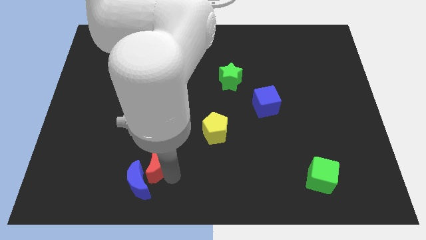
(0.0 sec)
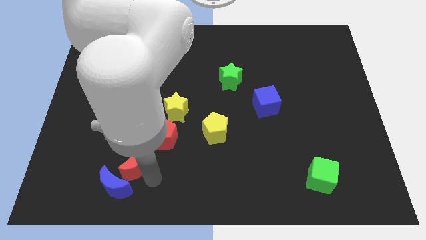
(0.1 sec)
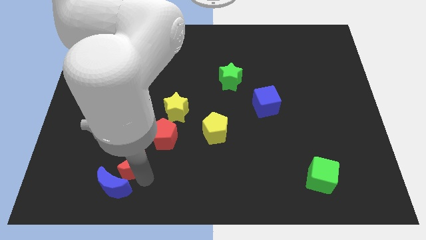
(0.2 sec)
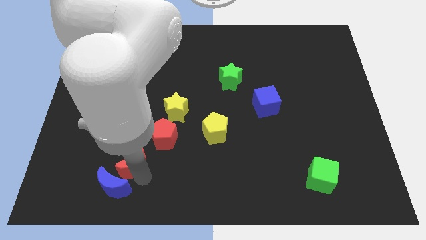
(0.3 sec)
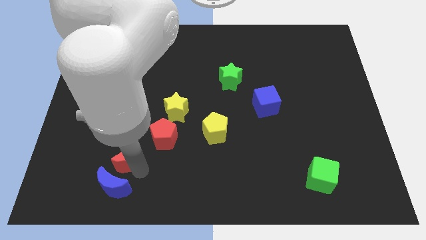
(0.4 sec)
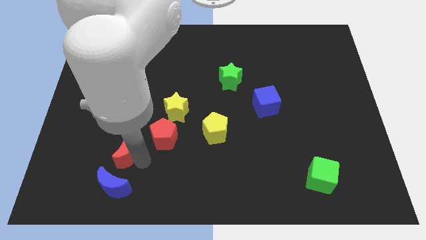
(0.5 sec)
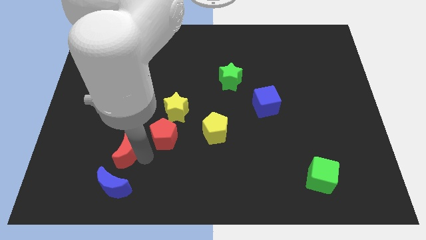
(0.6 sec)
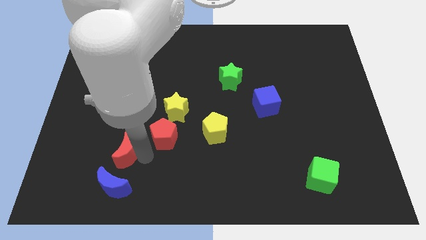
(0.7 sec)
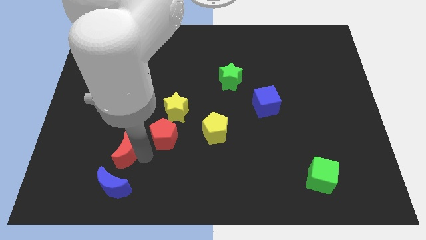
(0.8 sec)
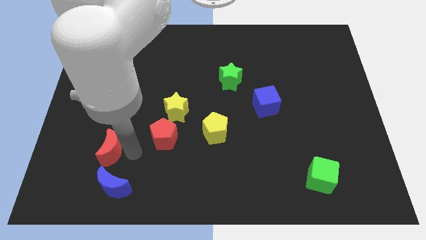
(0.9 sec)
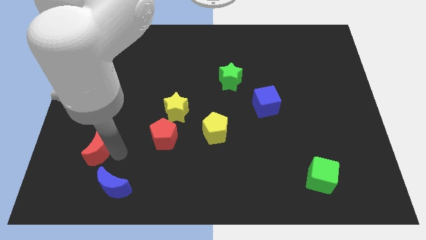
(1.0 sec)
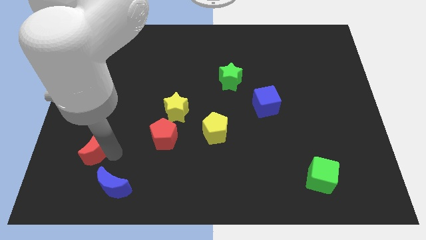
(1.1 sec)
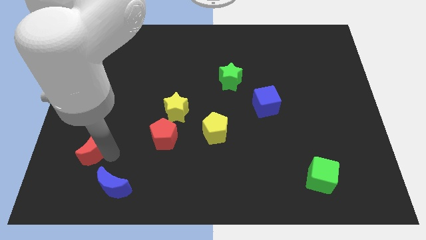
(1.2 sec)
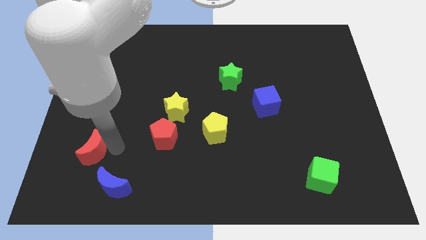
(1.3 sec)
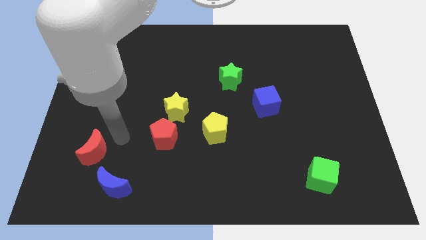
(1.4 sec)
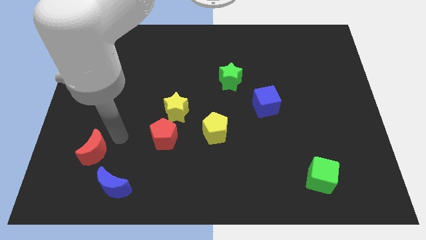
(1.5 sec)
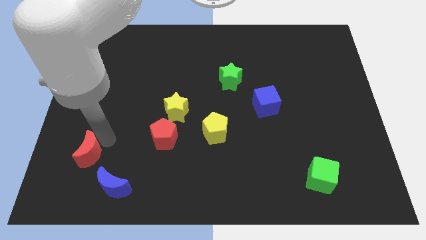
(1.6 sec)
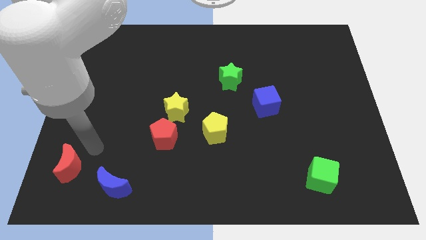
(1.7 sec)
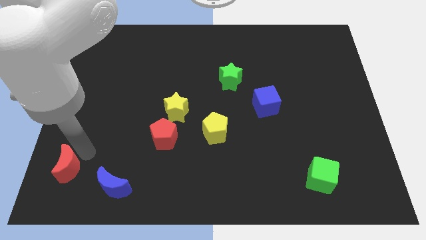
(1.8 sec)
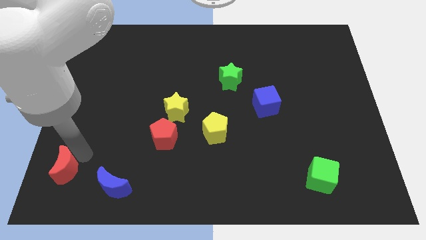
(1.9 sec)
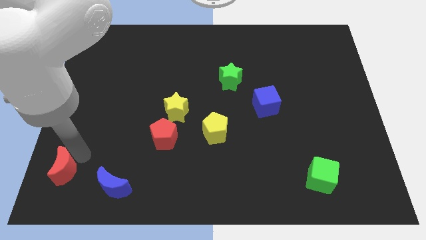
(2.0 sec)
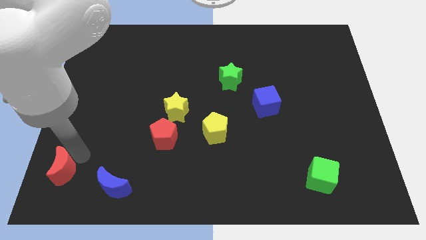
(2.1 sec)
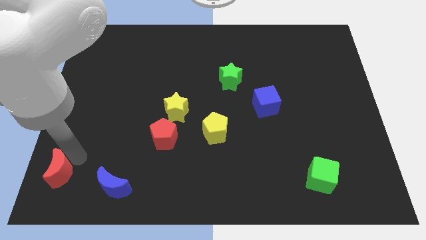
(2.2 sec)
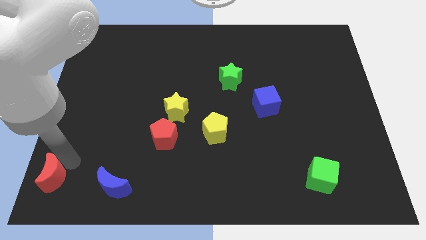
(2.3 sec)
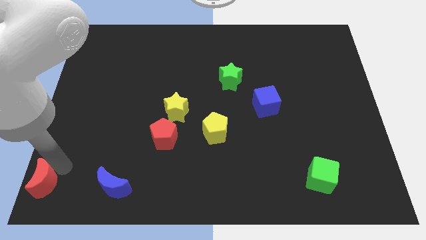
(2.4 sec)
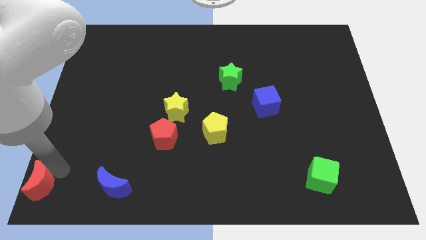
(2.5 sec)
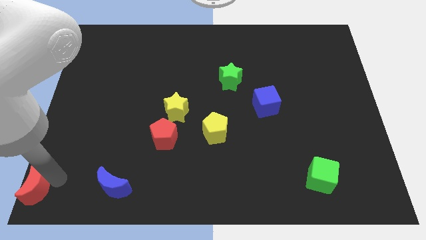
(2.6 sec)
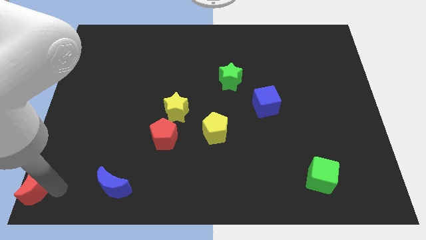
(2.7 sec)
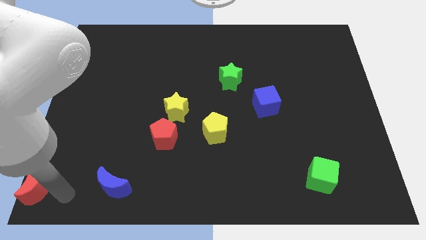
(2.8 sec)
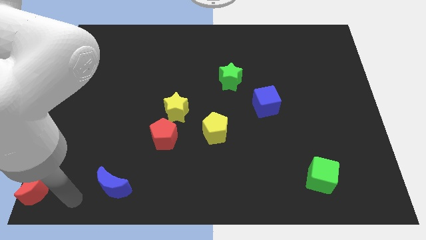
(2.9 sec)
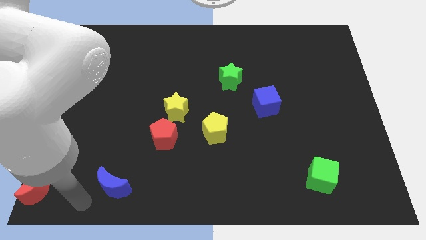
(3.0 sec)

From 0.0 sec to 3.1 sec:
place the red moon to the bottom left

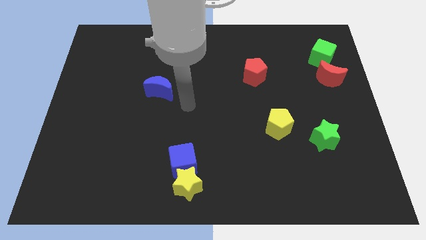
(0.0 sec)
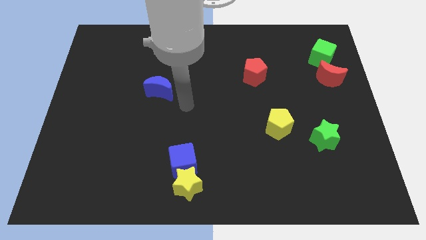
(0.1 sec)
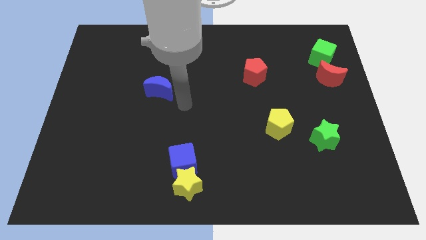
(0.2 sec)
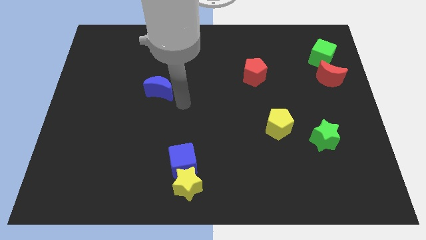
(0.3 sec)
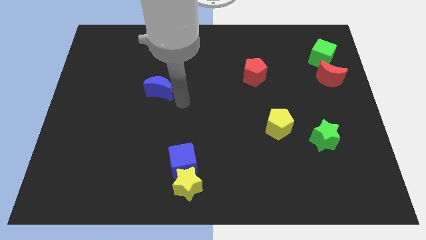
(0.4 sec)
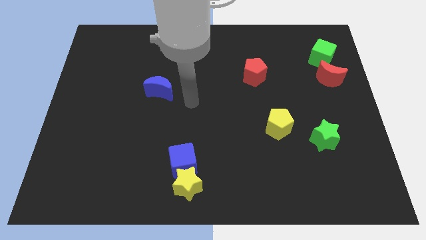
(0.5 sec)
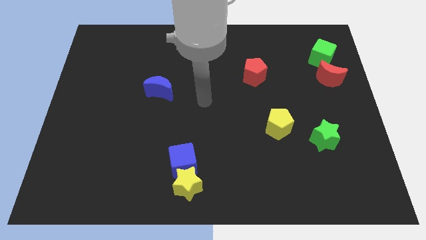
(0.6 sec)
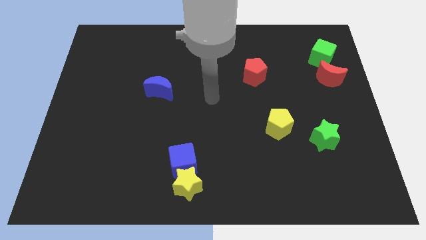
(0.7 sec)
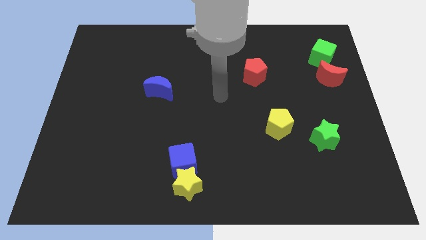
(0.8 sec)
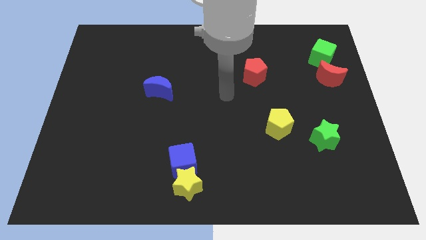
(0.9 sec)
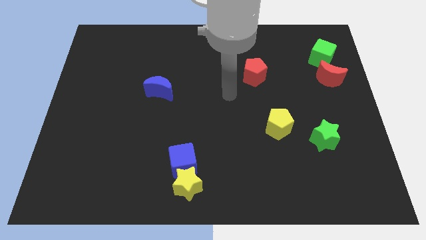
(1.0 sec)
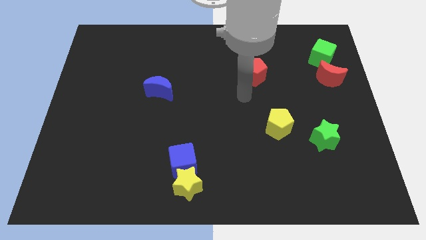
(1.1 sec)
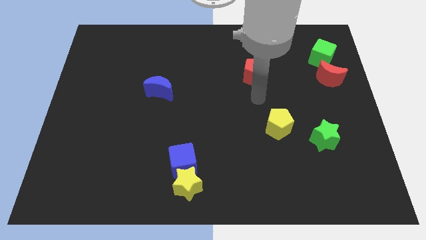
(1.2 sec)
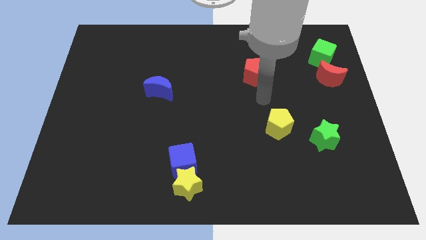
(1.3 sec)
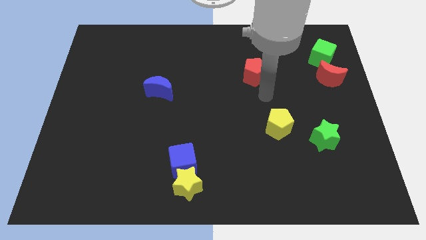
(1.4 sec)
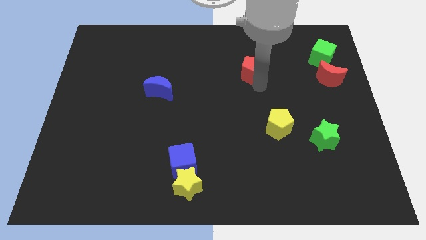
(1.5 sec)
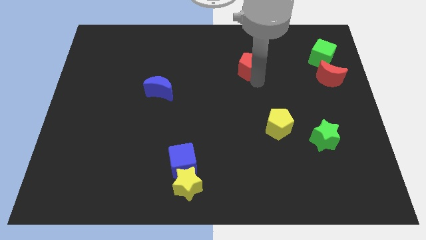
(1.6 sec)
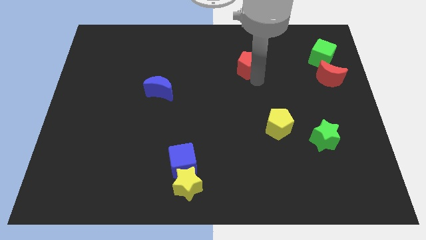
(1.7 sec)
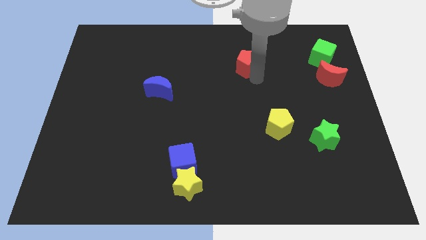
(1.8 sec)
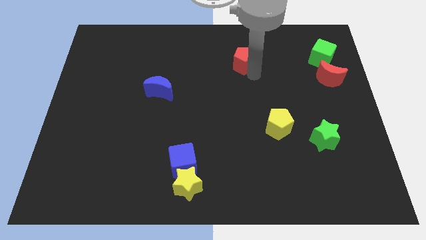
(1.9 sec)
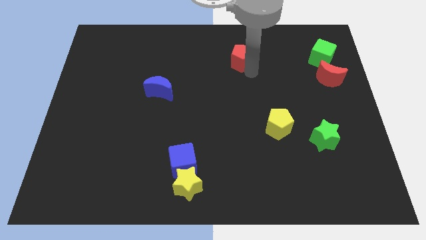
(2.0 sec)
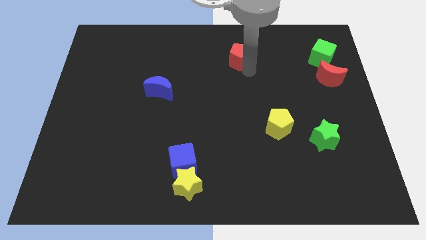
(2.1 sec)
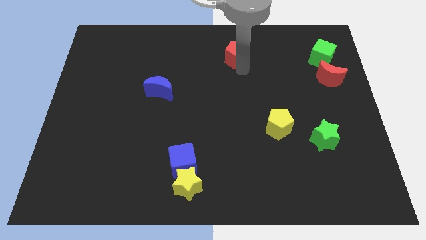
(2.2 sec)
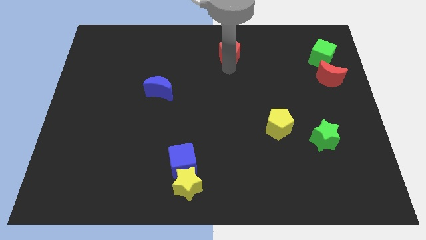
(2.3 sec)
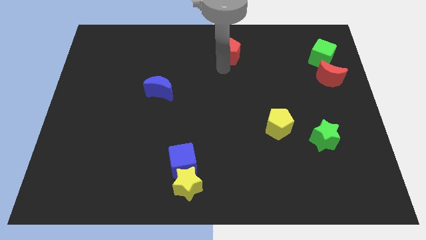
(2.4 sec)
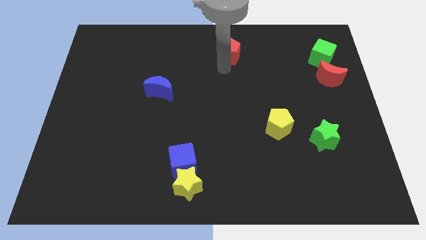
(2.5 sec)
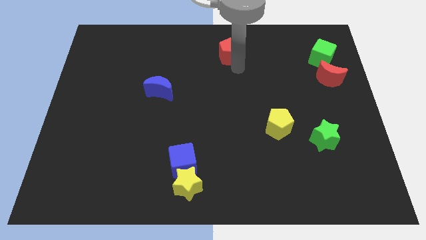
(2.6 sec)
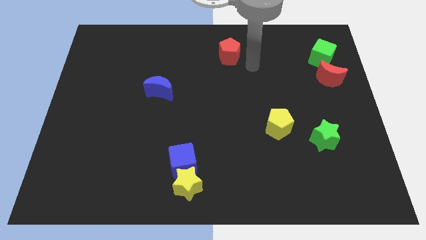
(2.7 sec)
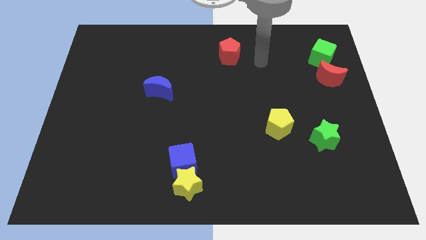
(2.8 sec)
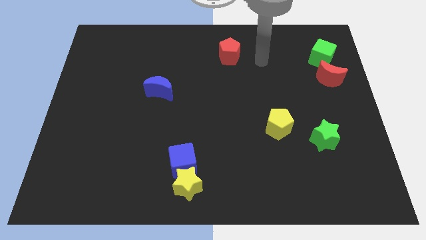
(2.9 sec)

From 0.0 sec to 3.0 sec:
push the red pentagon upwards

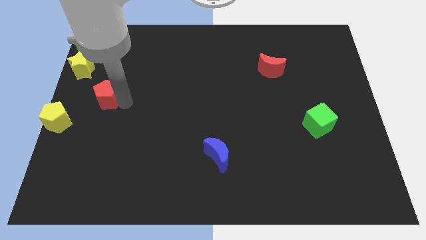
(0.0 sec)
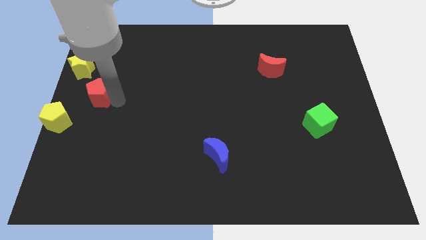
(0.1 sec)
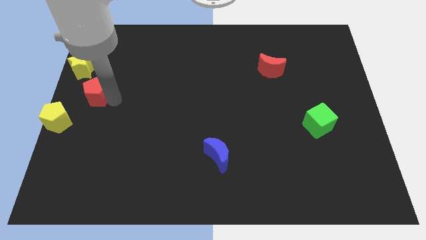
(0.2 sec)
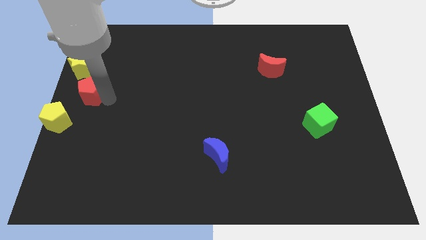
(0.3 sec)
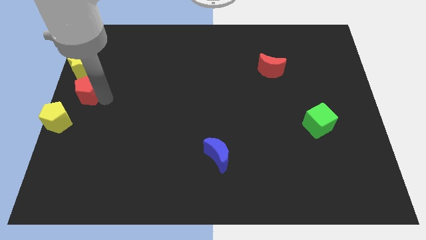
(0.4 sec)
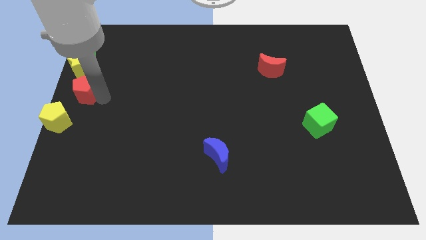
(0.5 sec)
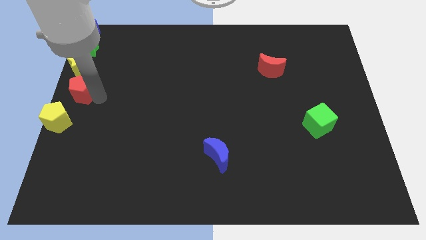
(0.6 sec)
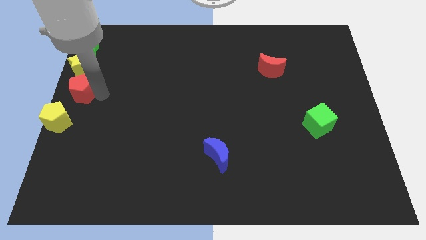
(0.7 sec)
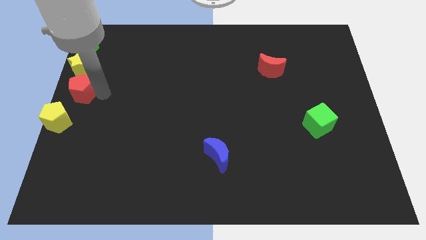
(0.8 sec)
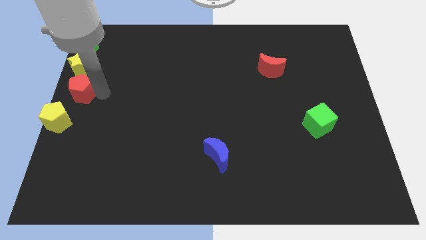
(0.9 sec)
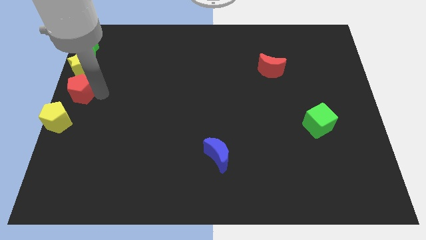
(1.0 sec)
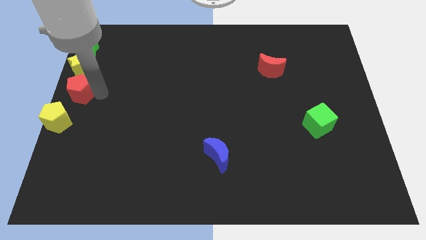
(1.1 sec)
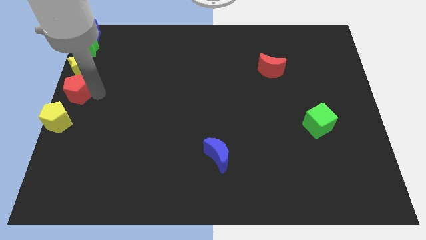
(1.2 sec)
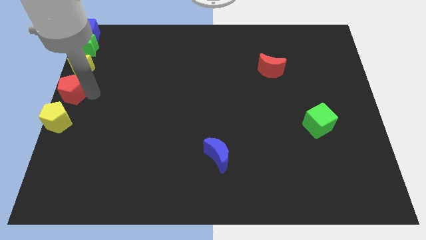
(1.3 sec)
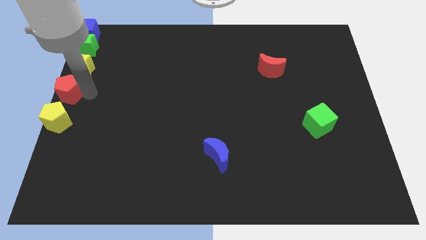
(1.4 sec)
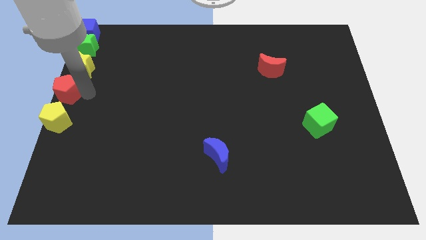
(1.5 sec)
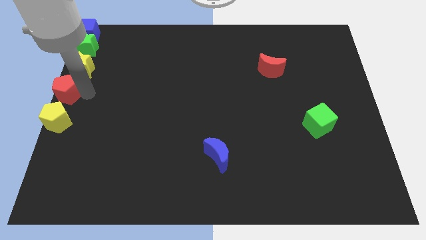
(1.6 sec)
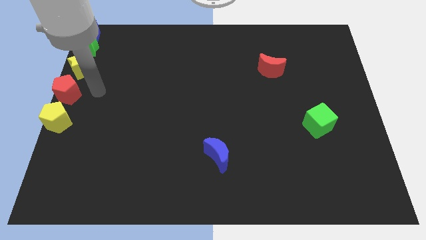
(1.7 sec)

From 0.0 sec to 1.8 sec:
place the red pentagon in between the yellow star and yellow pentagon

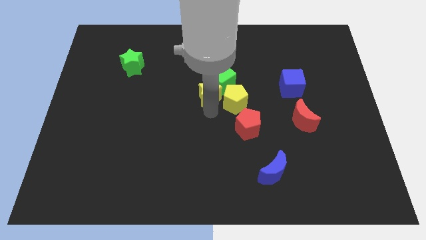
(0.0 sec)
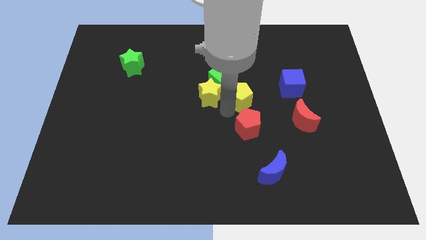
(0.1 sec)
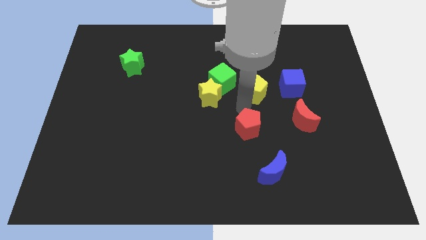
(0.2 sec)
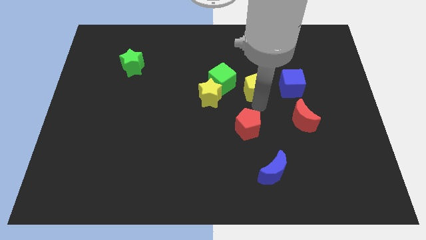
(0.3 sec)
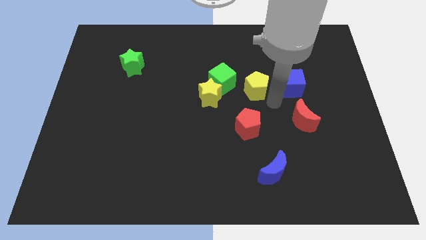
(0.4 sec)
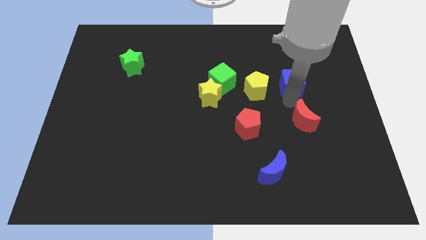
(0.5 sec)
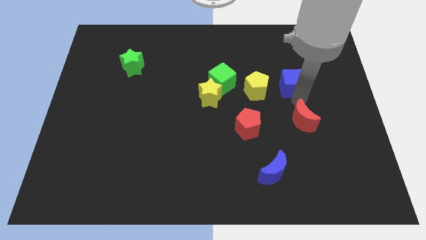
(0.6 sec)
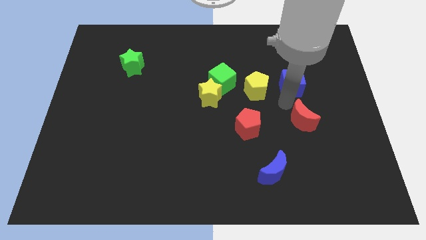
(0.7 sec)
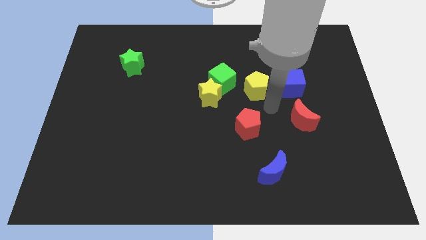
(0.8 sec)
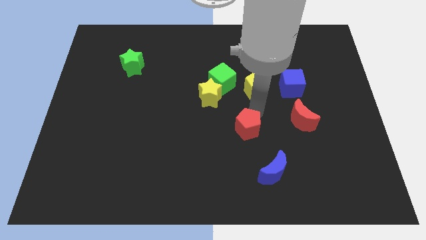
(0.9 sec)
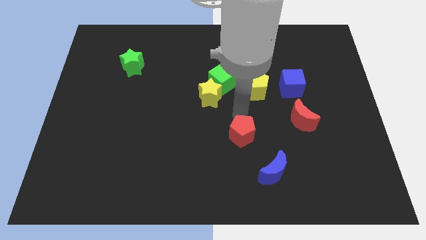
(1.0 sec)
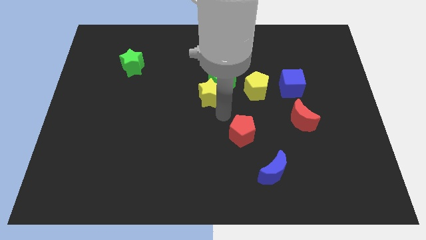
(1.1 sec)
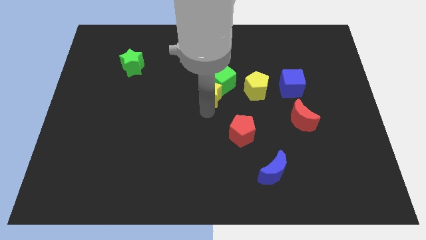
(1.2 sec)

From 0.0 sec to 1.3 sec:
separate the yellow star and yellow pentagon
